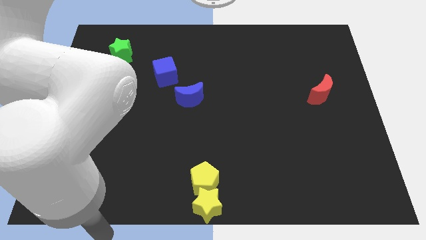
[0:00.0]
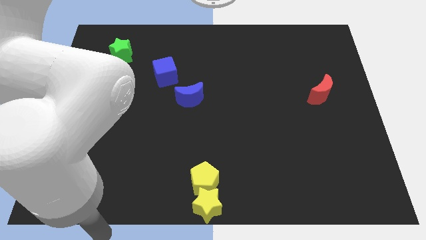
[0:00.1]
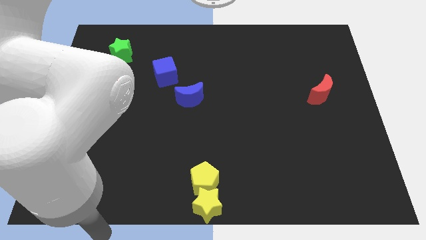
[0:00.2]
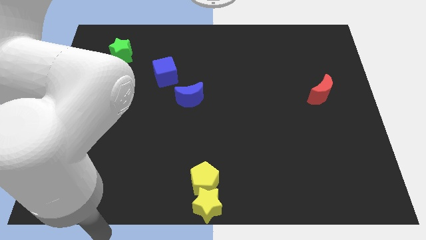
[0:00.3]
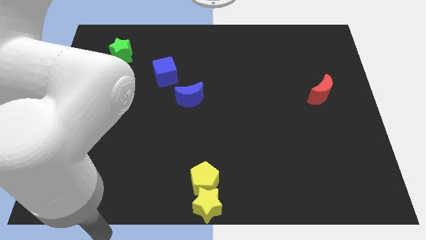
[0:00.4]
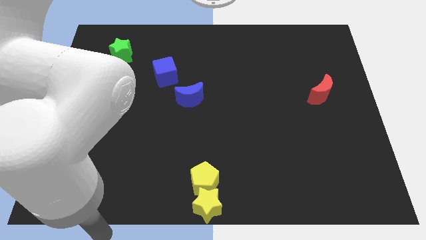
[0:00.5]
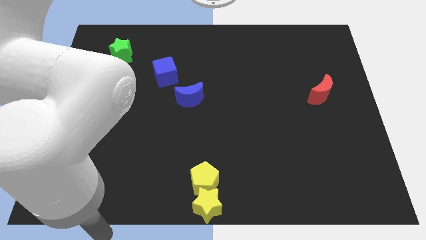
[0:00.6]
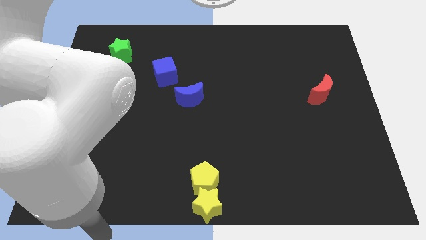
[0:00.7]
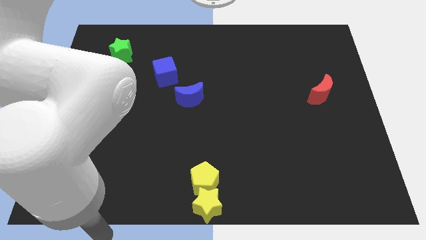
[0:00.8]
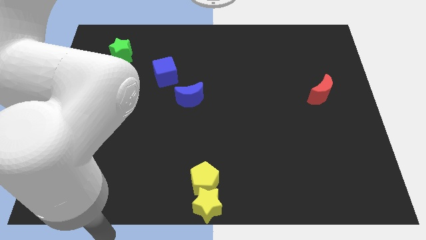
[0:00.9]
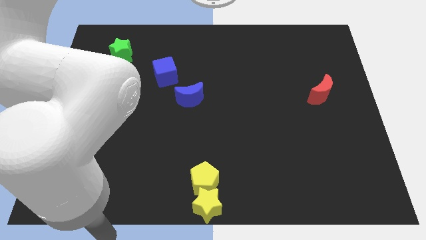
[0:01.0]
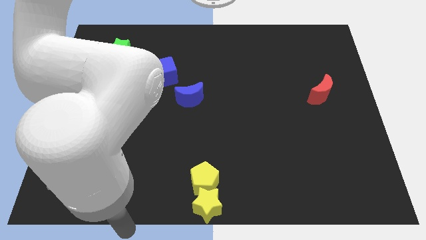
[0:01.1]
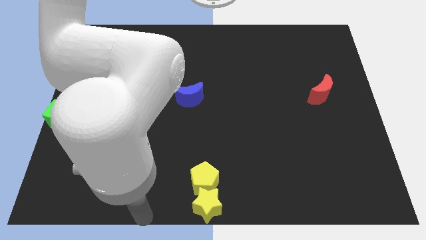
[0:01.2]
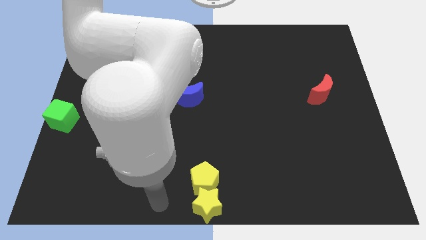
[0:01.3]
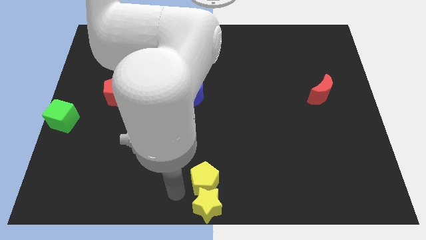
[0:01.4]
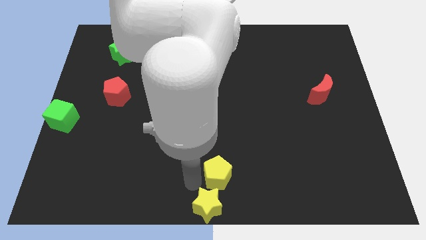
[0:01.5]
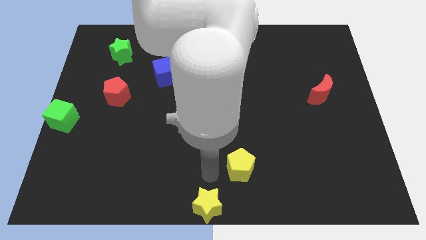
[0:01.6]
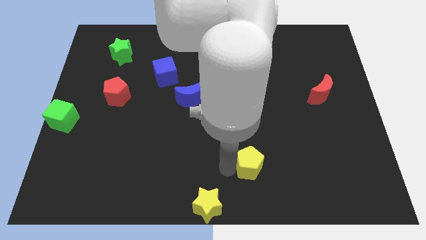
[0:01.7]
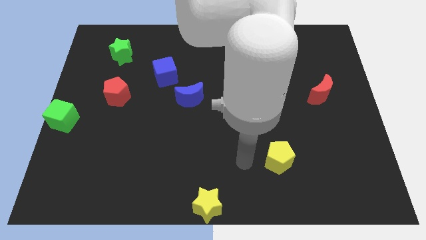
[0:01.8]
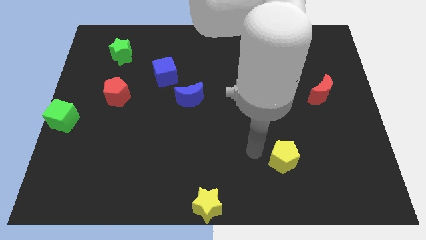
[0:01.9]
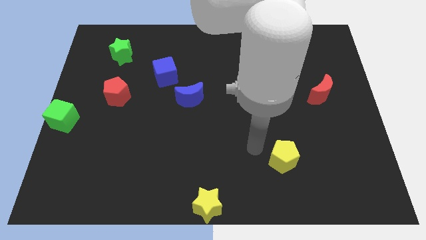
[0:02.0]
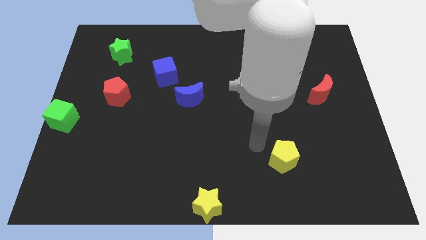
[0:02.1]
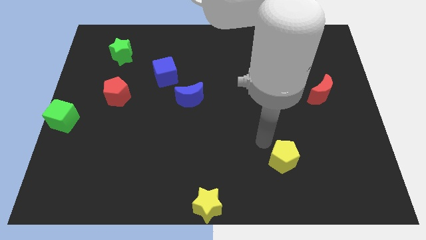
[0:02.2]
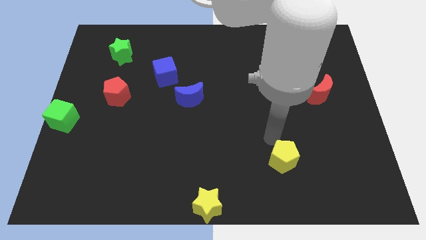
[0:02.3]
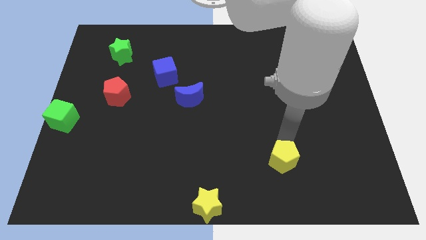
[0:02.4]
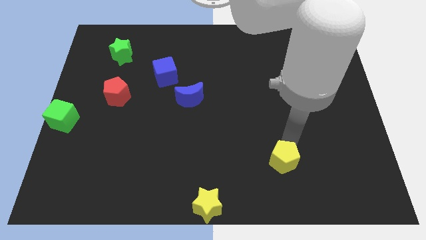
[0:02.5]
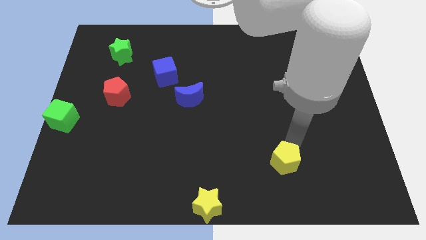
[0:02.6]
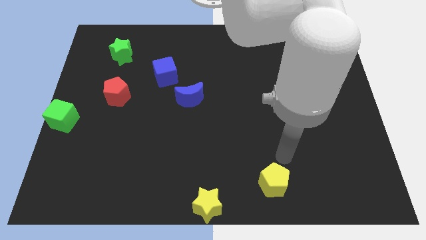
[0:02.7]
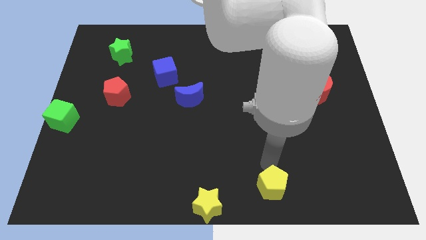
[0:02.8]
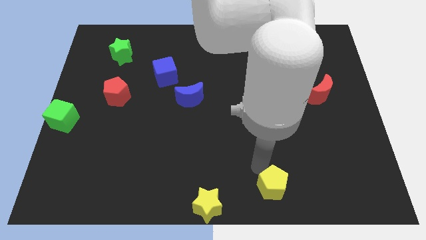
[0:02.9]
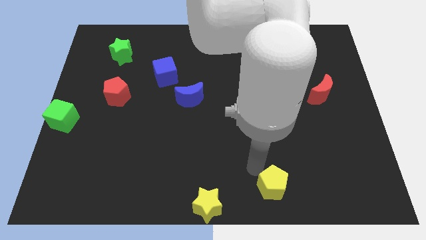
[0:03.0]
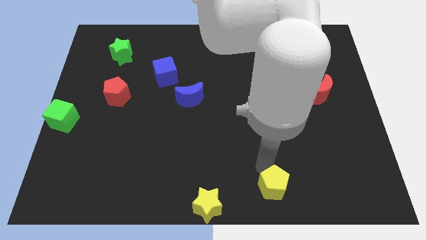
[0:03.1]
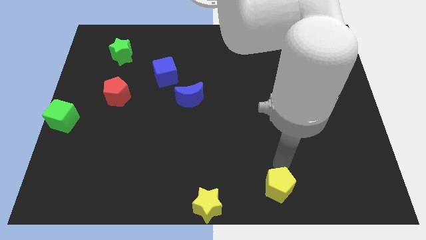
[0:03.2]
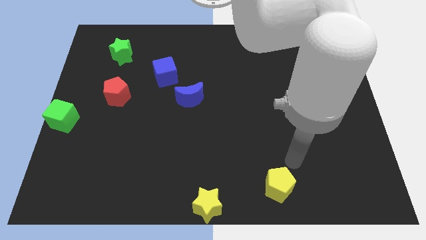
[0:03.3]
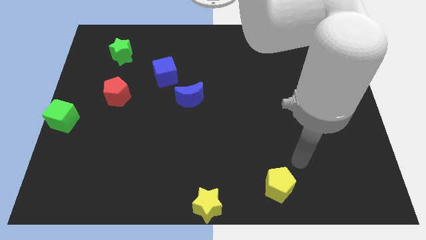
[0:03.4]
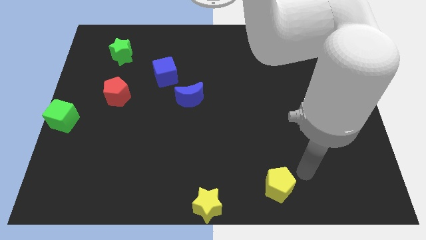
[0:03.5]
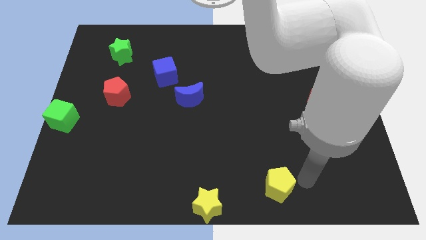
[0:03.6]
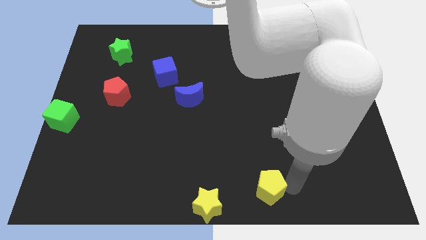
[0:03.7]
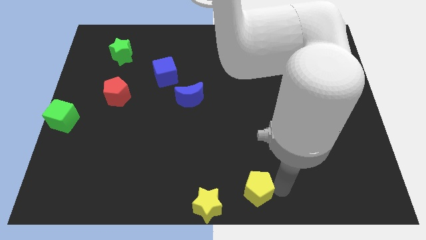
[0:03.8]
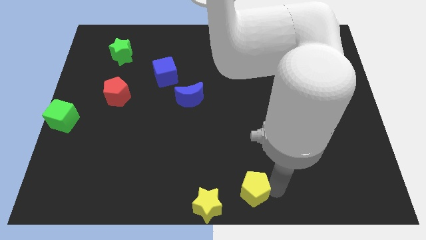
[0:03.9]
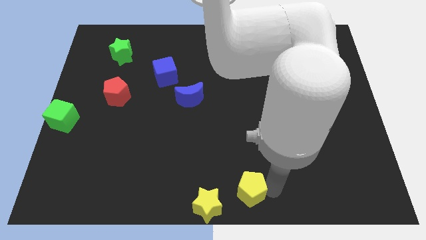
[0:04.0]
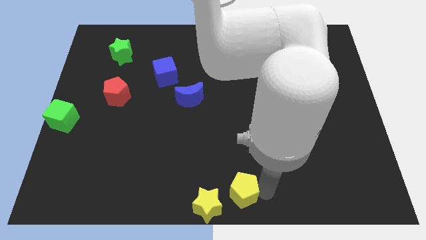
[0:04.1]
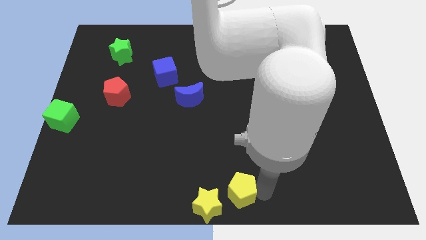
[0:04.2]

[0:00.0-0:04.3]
place the yellow pentagon to the top right of the yellow star

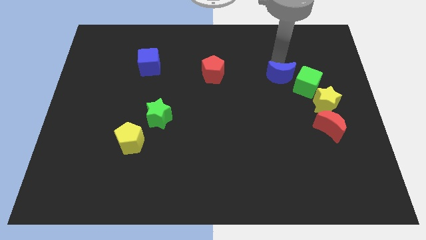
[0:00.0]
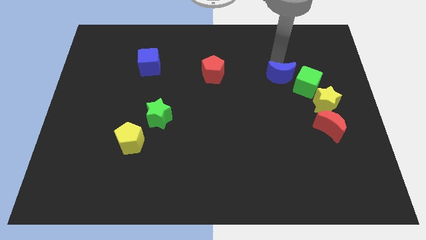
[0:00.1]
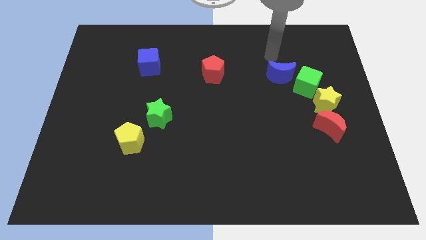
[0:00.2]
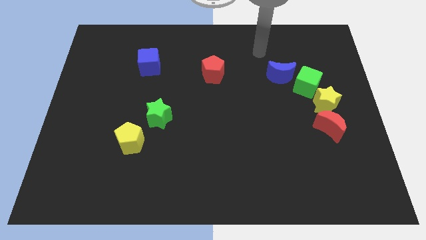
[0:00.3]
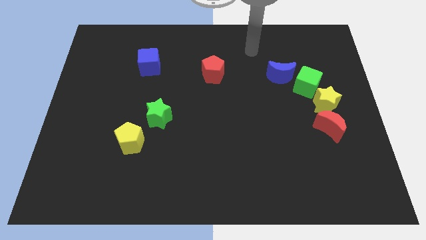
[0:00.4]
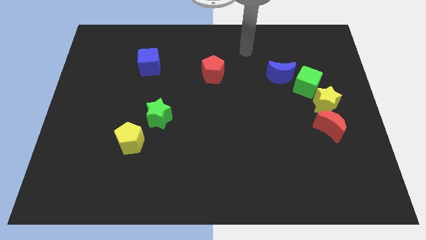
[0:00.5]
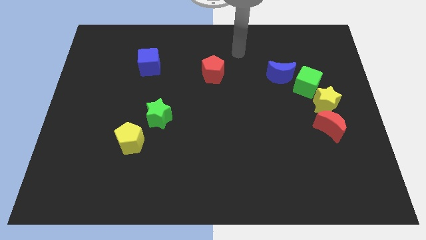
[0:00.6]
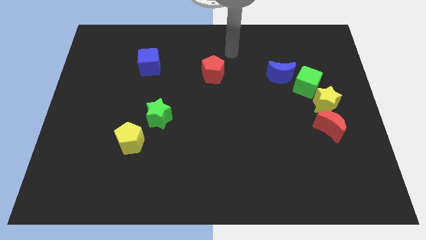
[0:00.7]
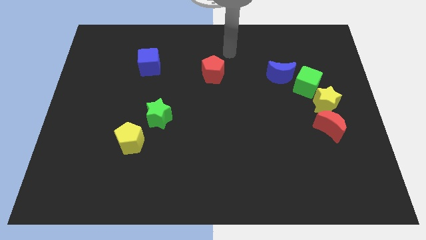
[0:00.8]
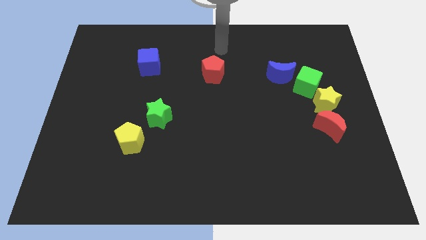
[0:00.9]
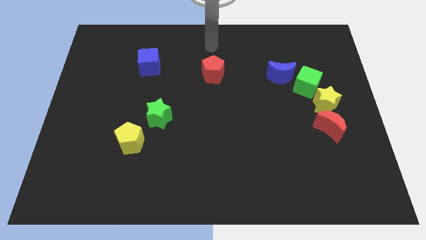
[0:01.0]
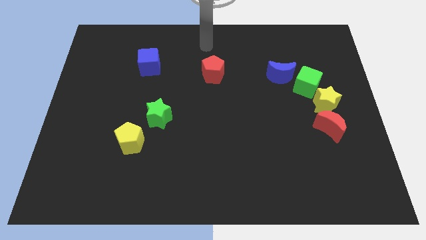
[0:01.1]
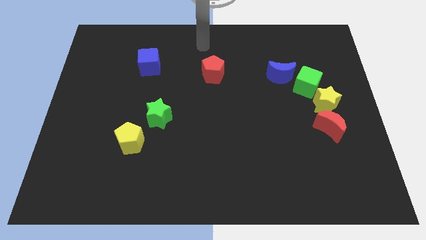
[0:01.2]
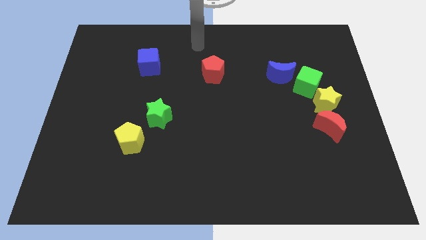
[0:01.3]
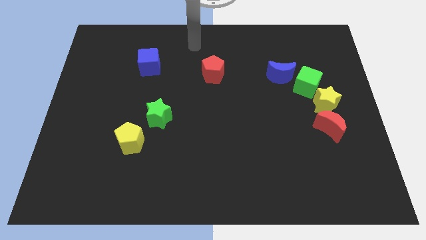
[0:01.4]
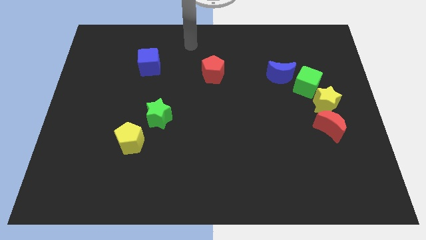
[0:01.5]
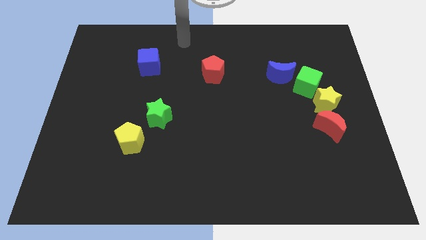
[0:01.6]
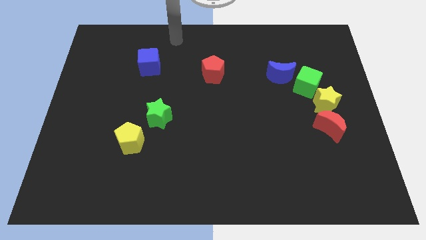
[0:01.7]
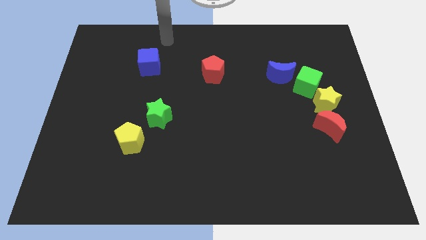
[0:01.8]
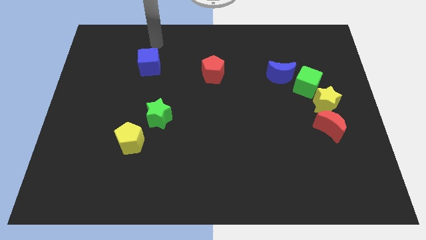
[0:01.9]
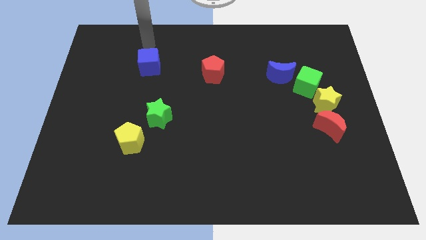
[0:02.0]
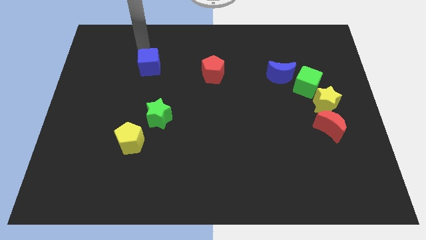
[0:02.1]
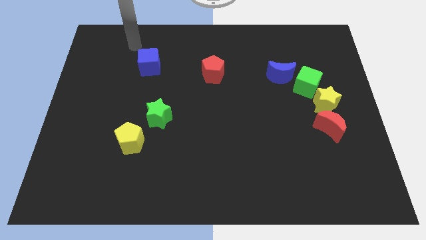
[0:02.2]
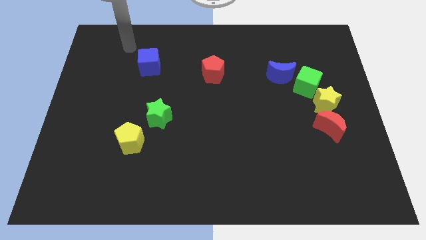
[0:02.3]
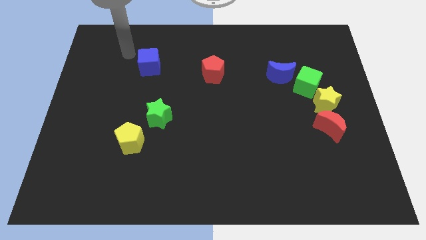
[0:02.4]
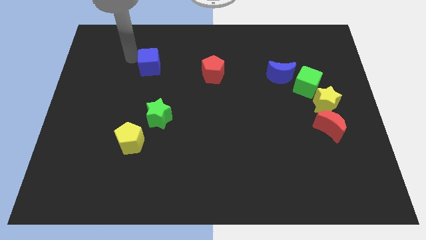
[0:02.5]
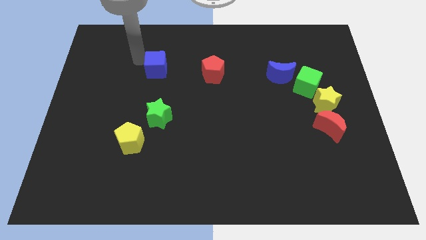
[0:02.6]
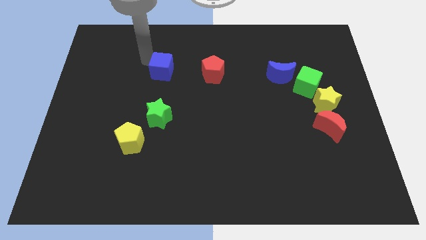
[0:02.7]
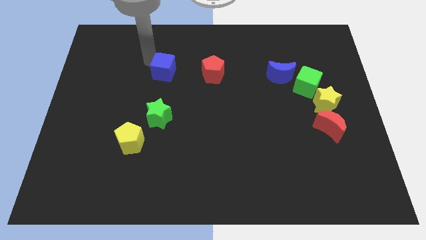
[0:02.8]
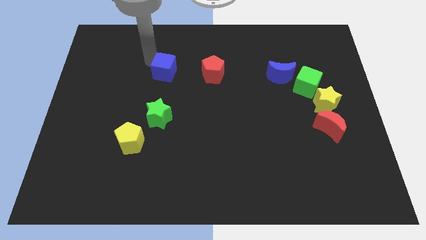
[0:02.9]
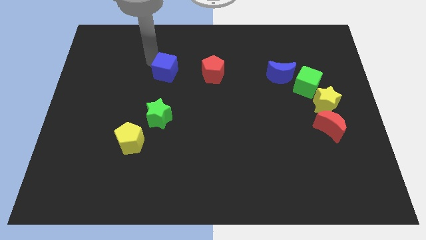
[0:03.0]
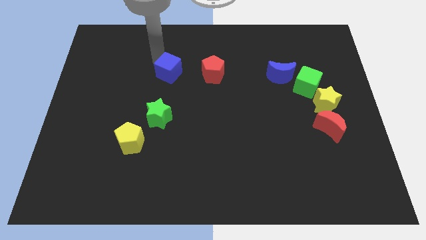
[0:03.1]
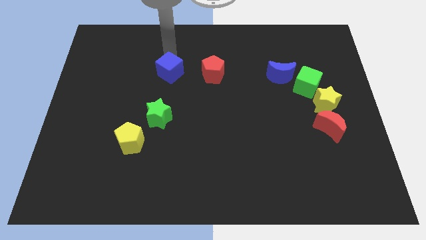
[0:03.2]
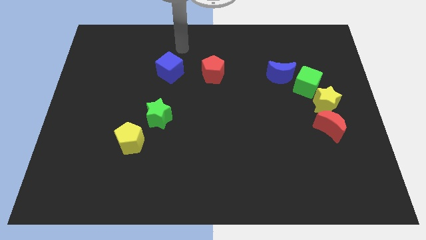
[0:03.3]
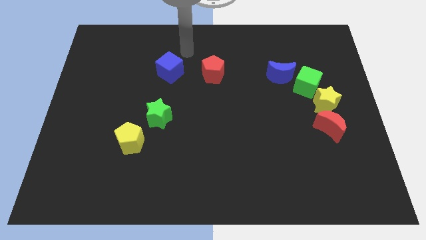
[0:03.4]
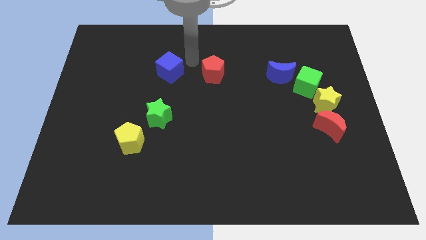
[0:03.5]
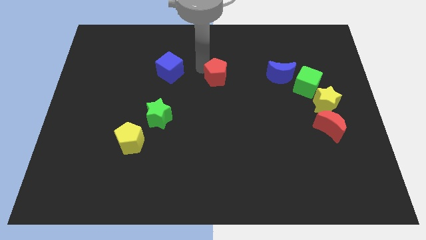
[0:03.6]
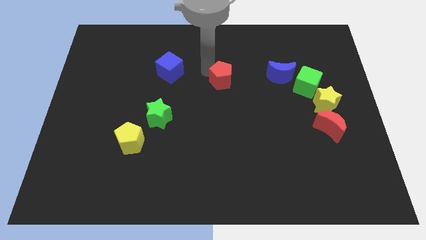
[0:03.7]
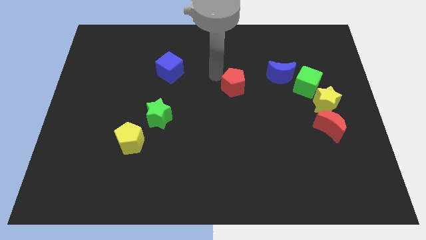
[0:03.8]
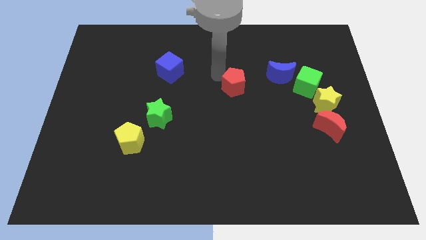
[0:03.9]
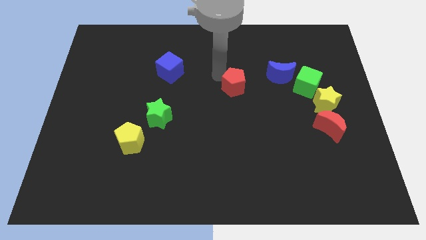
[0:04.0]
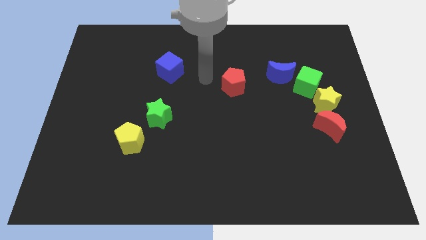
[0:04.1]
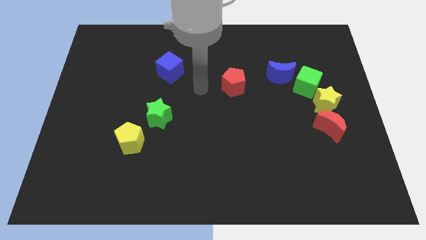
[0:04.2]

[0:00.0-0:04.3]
move your arm away from the blue moon

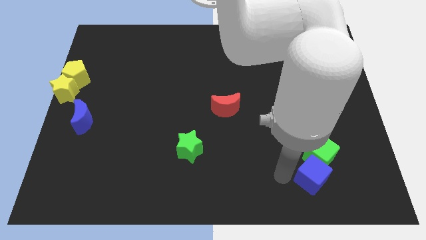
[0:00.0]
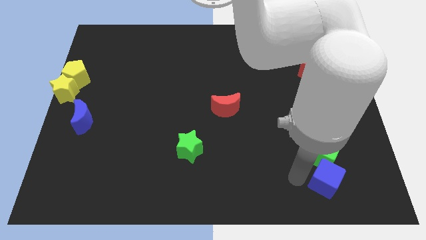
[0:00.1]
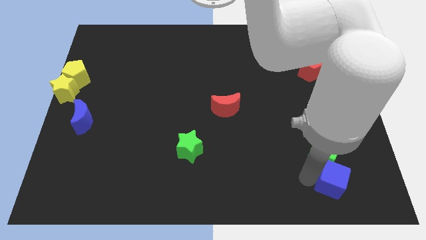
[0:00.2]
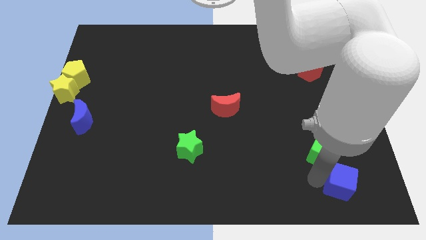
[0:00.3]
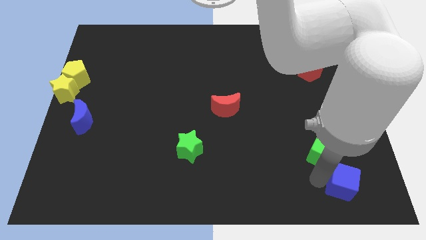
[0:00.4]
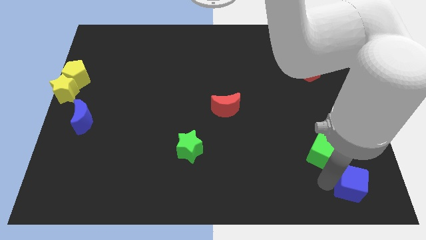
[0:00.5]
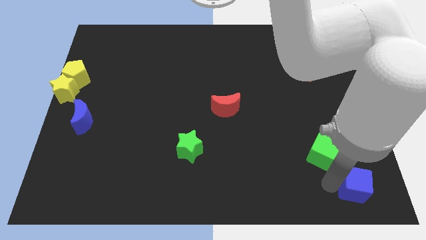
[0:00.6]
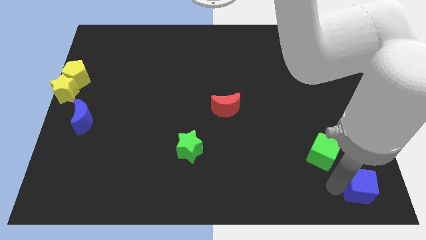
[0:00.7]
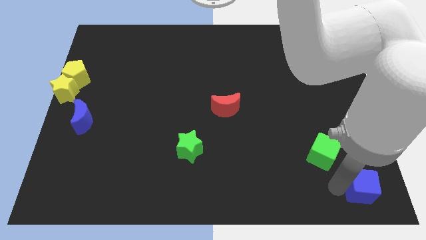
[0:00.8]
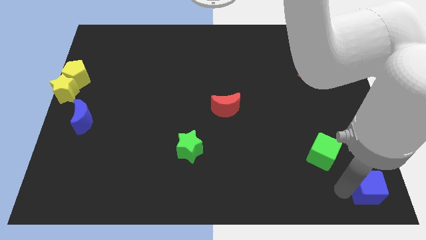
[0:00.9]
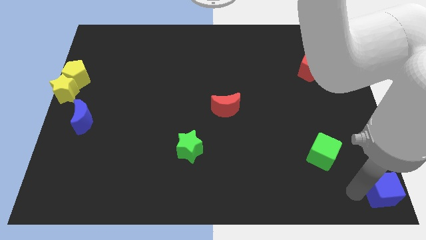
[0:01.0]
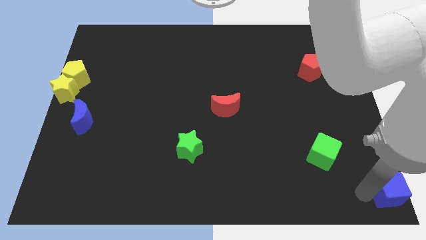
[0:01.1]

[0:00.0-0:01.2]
slide the blue cube bottom right
